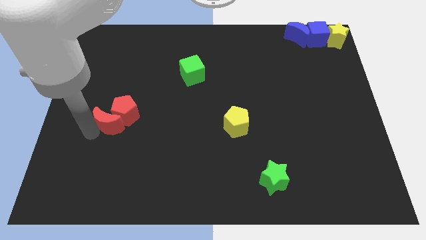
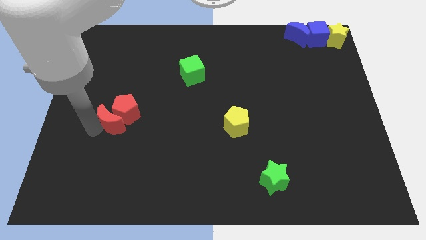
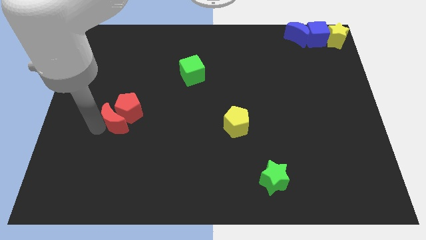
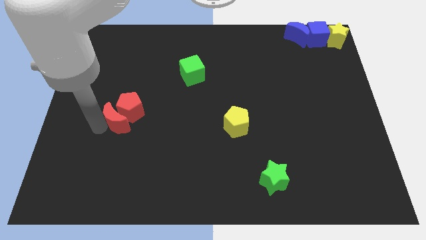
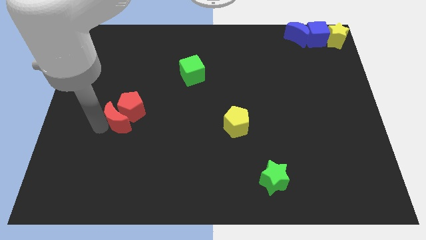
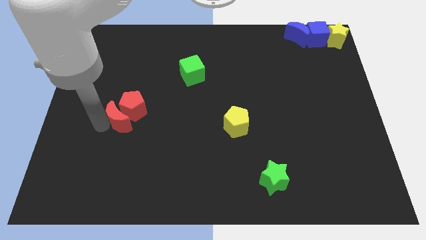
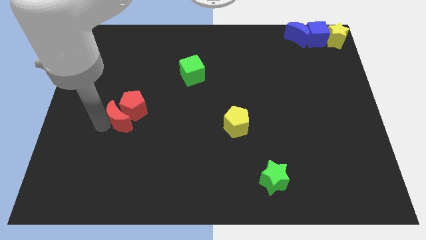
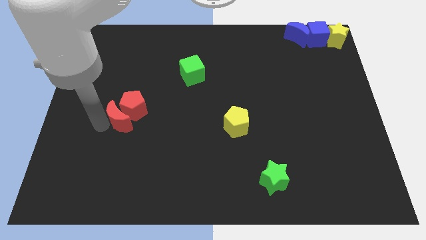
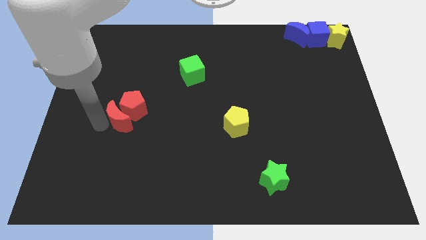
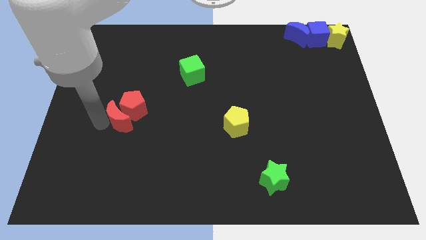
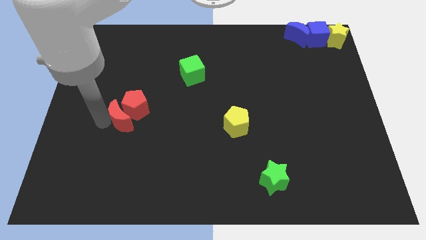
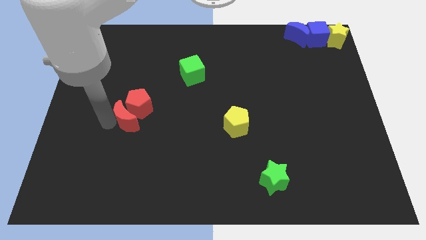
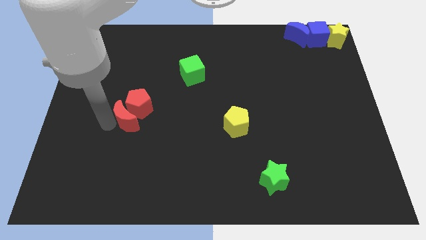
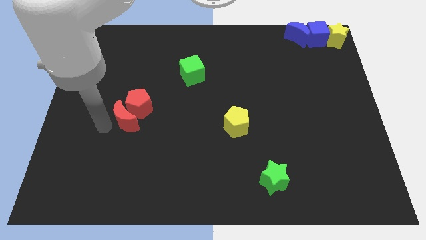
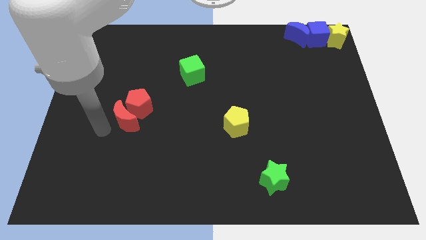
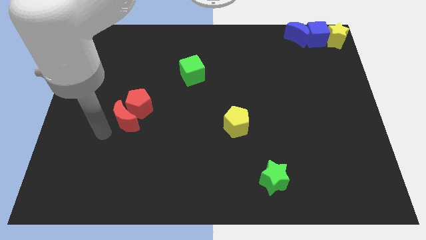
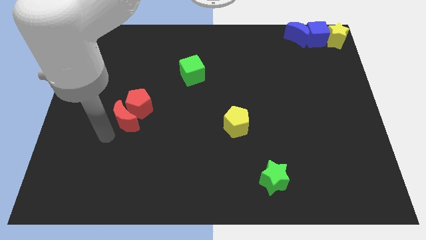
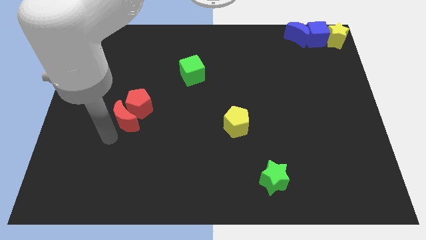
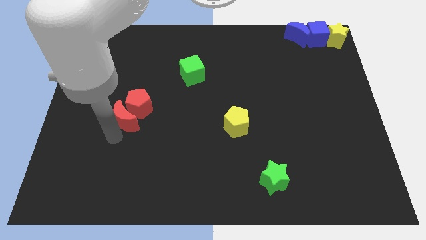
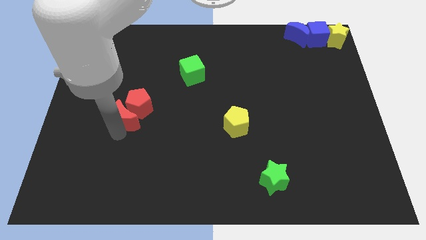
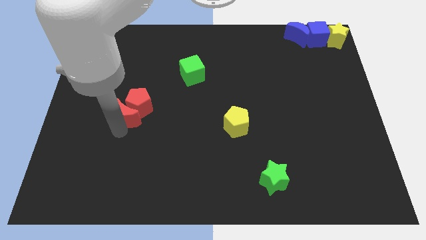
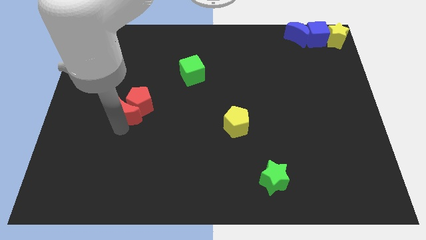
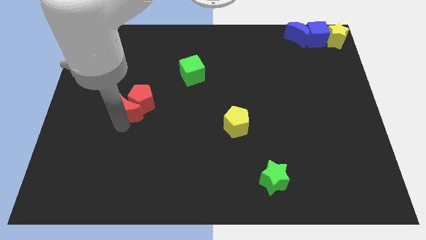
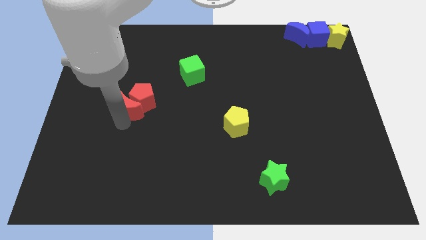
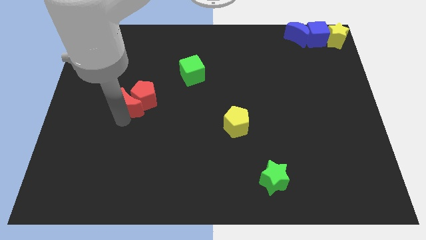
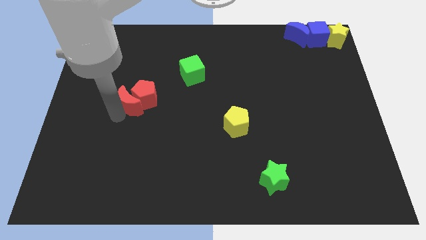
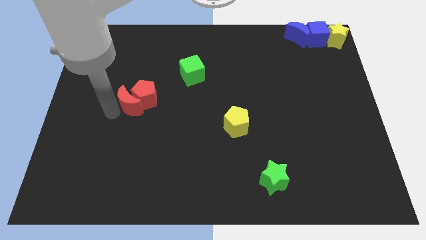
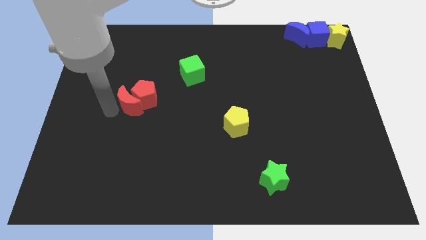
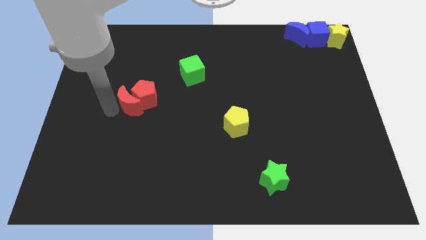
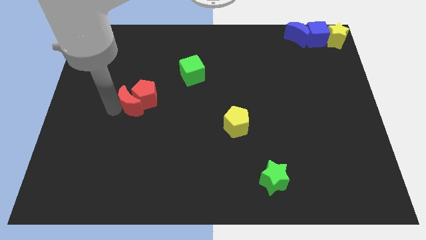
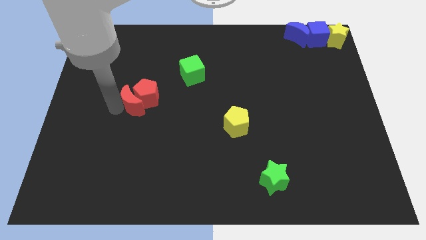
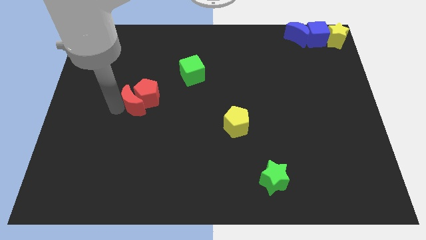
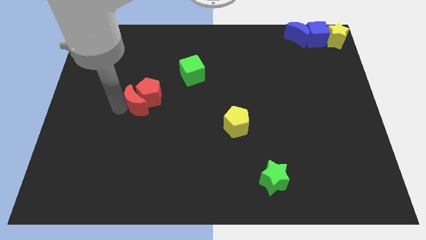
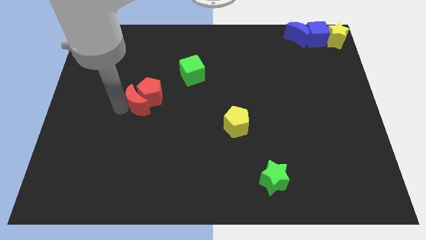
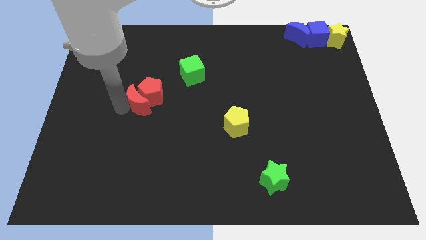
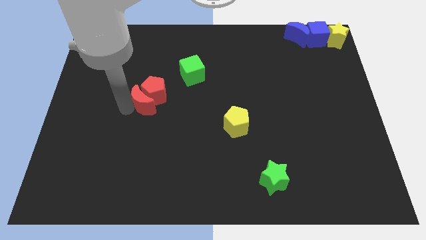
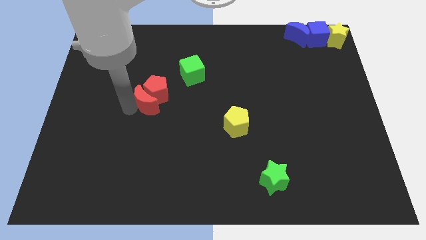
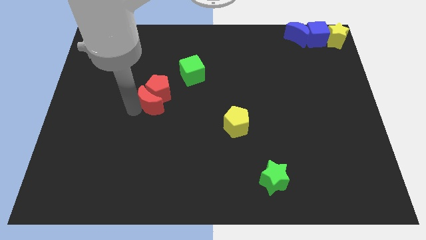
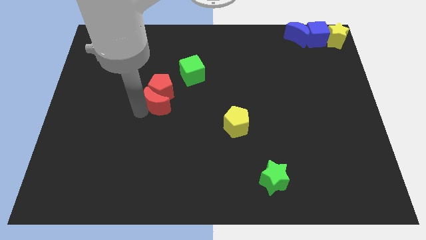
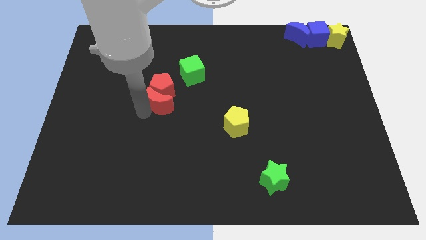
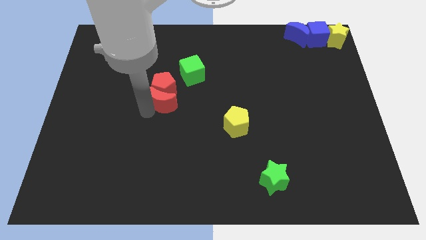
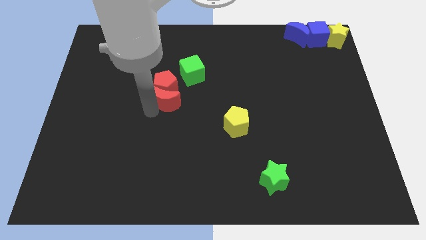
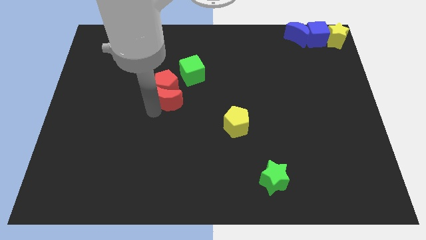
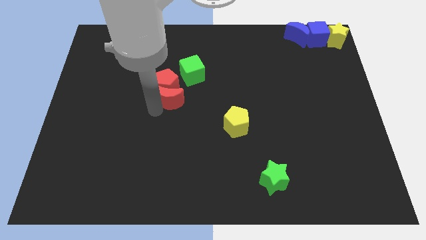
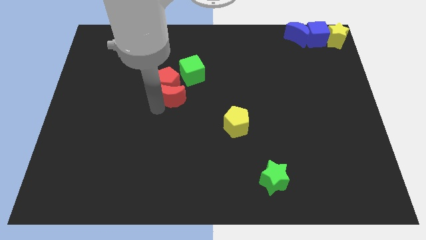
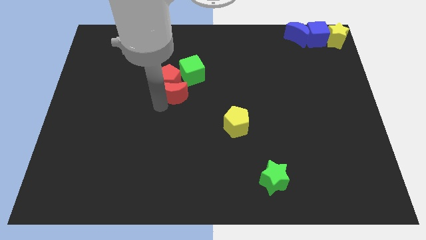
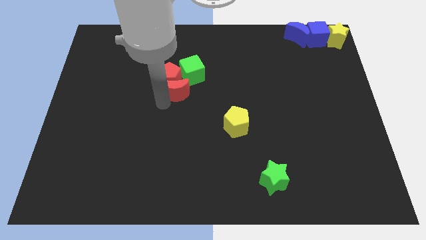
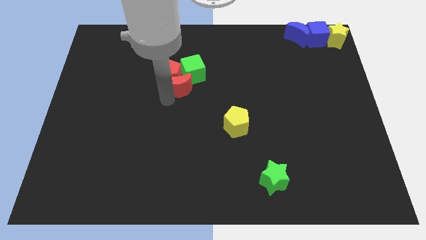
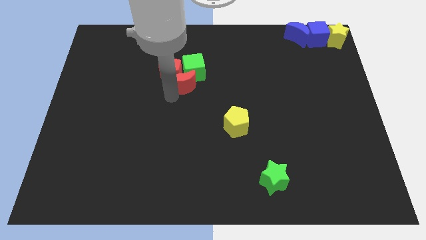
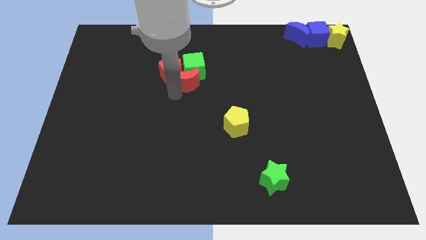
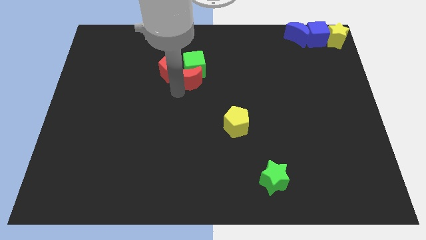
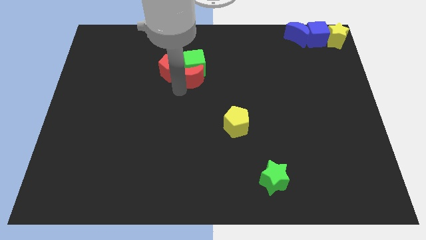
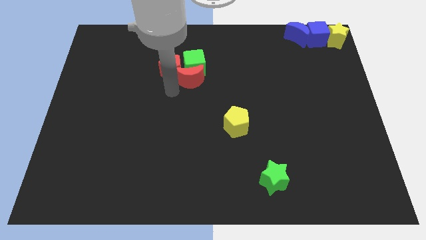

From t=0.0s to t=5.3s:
push the group of red blocks into the green cube

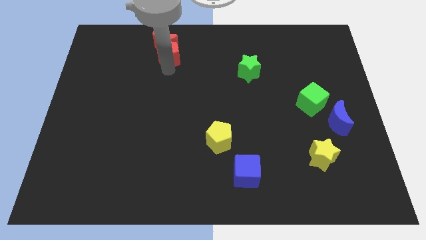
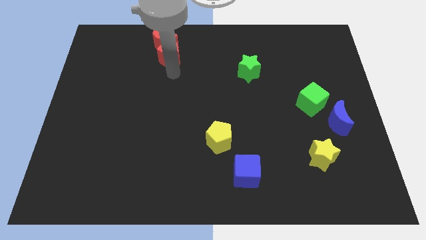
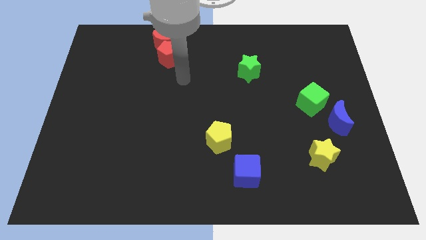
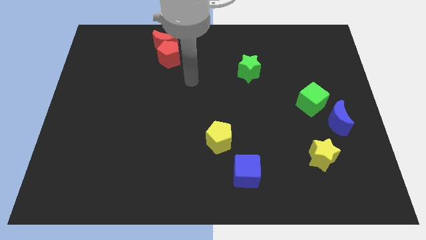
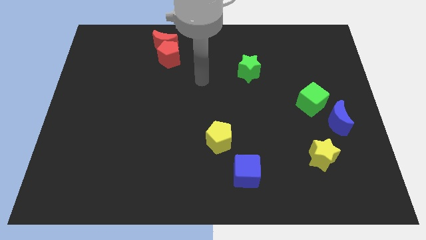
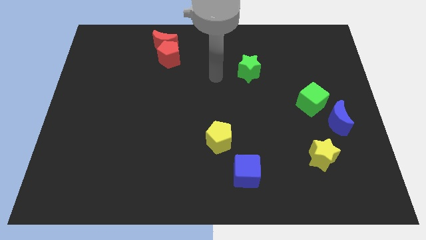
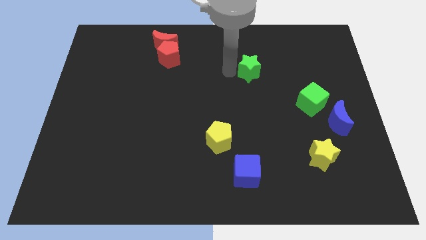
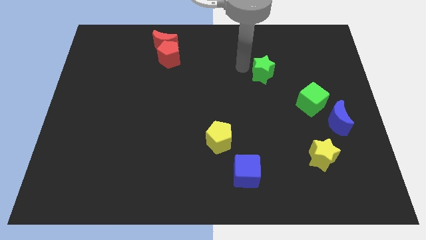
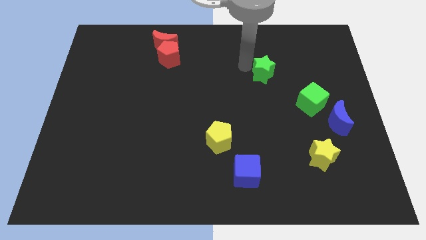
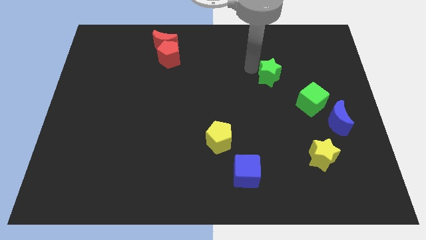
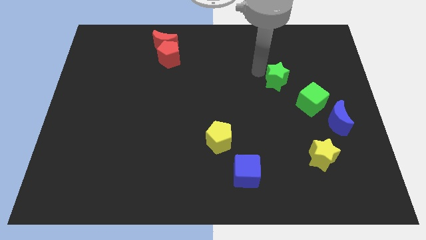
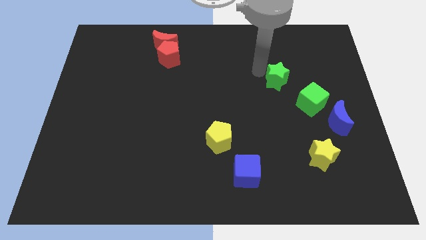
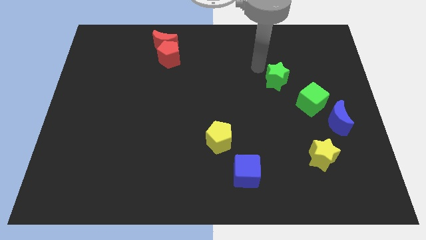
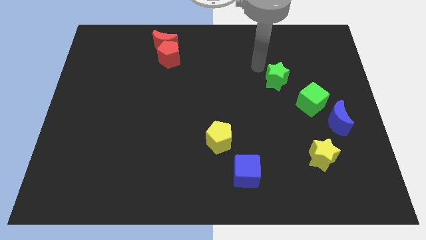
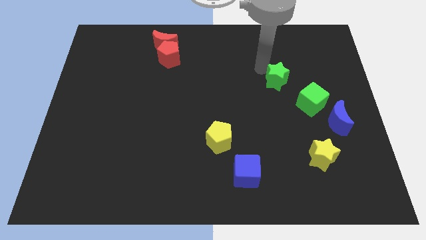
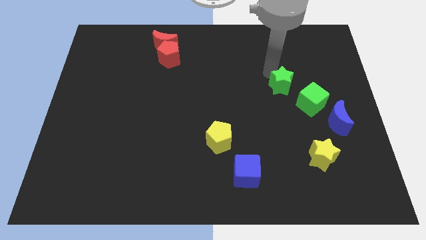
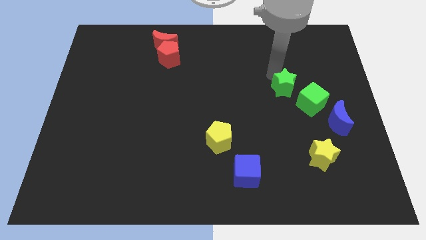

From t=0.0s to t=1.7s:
slide the green star towards the green cube

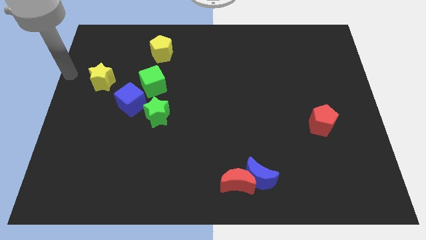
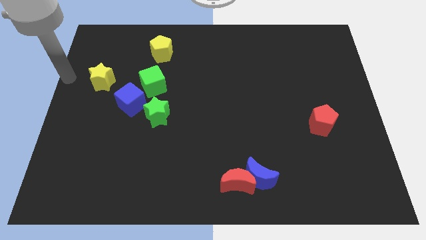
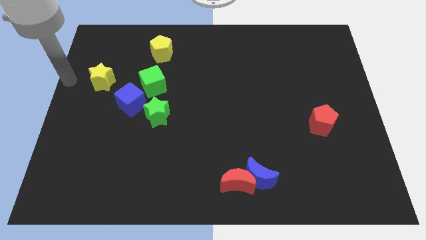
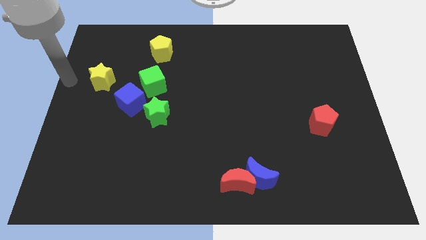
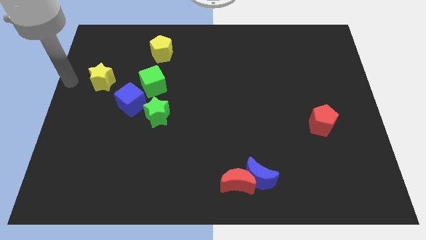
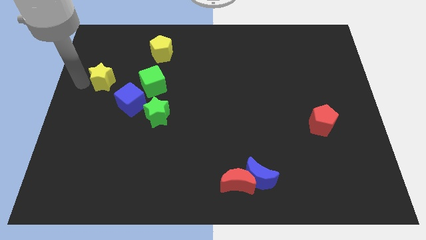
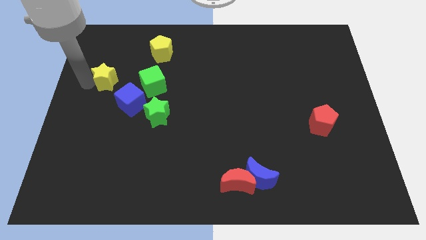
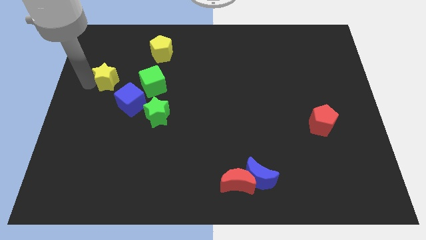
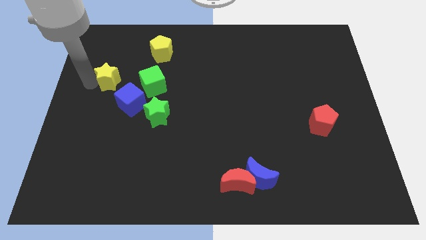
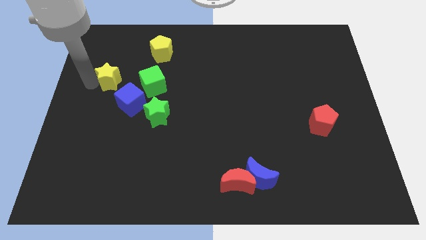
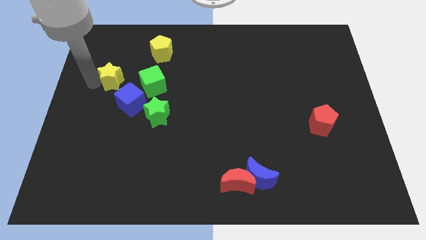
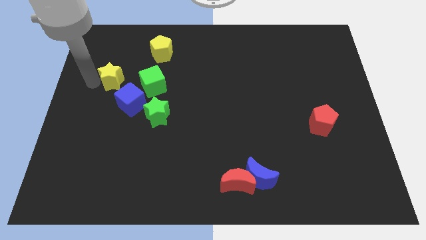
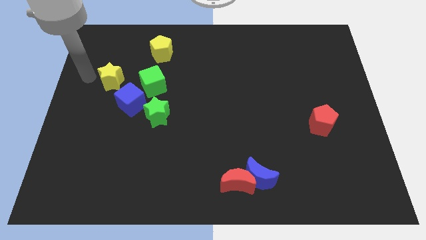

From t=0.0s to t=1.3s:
touch the yellow star

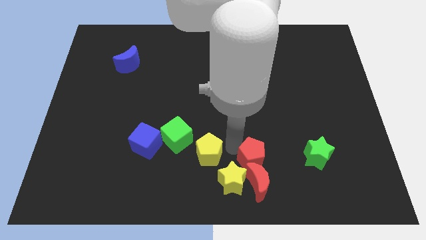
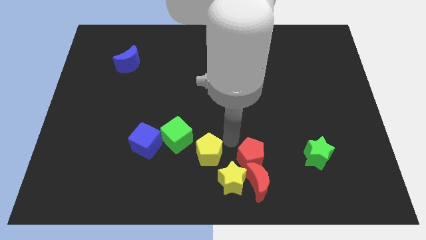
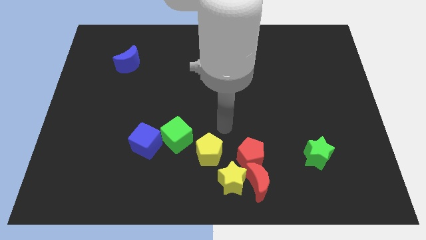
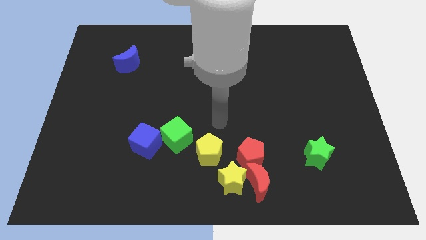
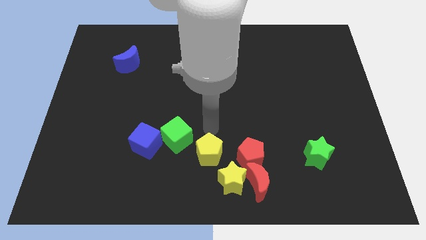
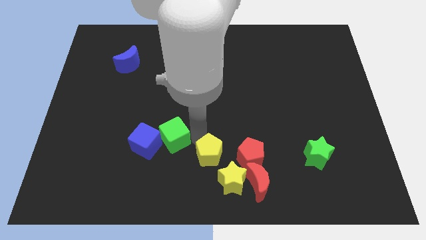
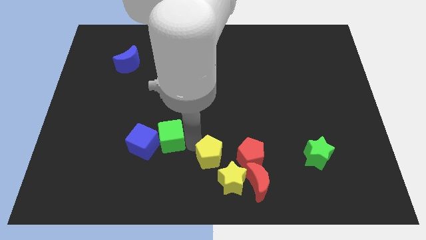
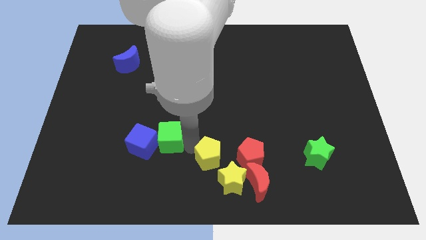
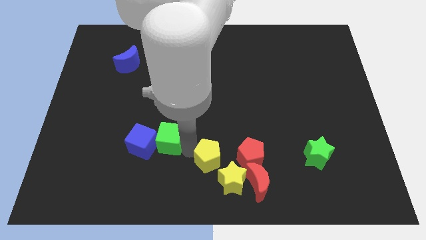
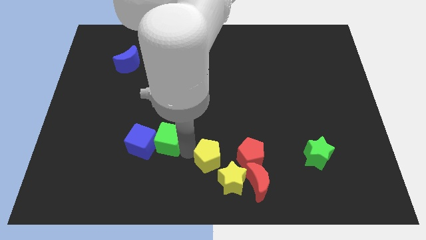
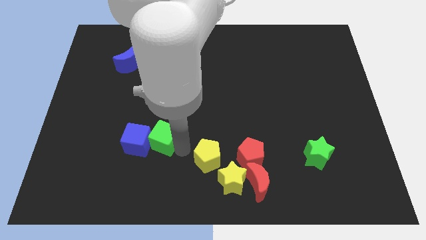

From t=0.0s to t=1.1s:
put arm in between green cube and yellow pentagon
